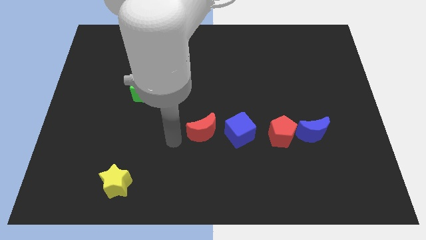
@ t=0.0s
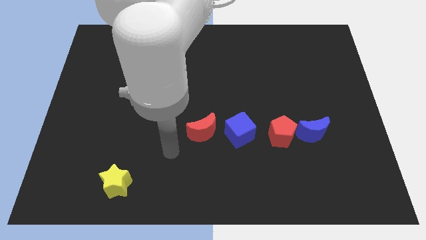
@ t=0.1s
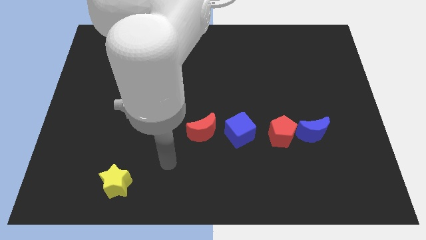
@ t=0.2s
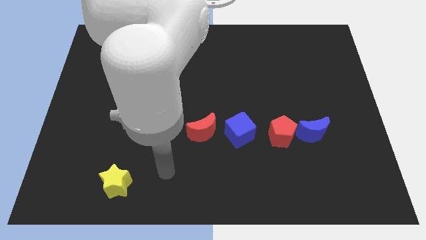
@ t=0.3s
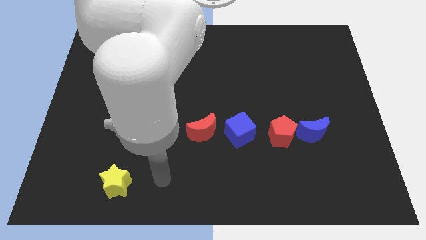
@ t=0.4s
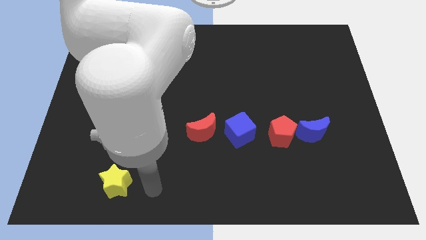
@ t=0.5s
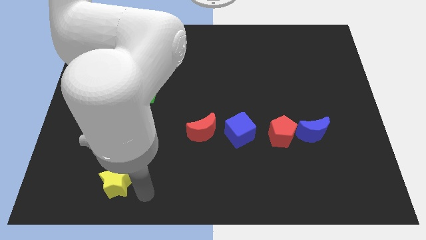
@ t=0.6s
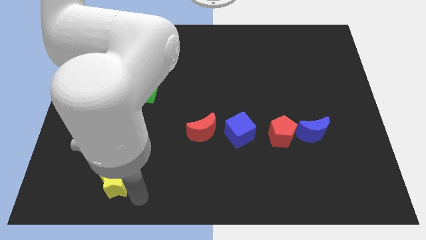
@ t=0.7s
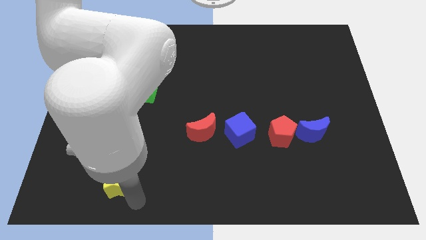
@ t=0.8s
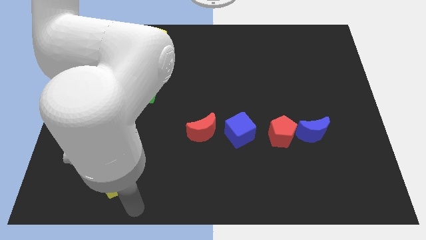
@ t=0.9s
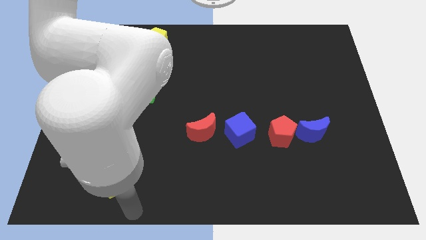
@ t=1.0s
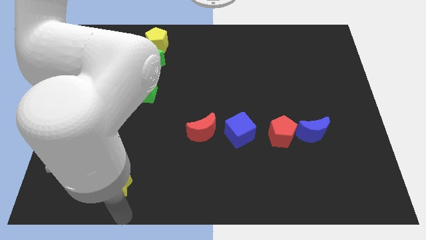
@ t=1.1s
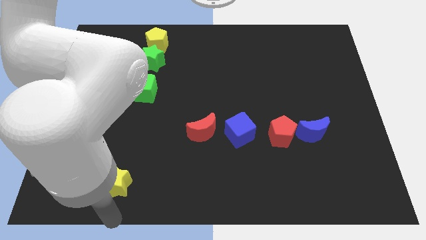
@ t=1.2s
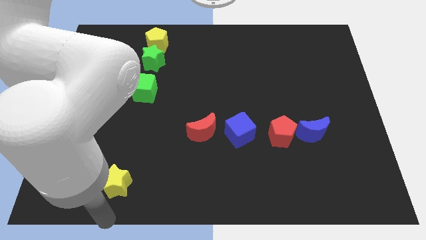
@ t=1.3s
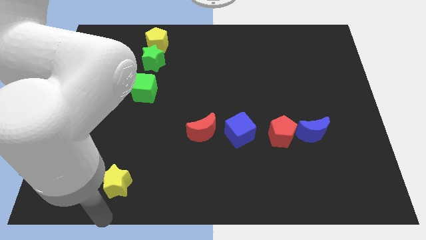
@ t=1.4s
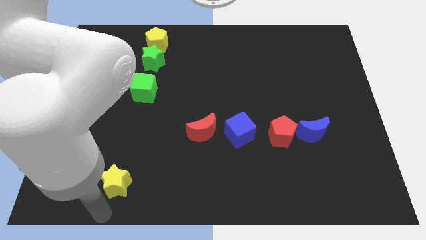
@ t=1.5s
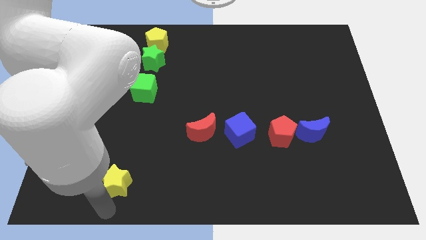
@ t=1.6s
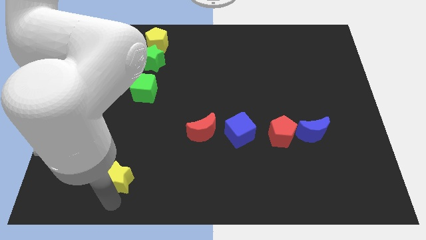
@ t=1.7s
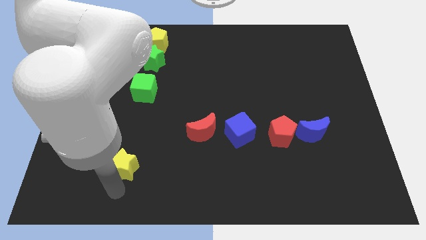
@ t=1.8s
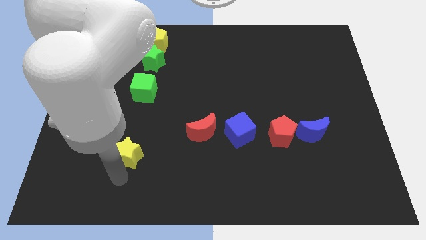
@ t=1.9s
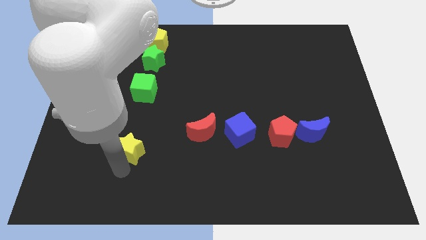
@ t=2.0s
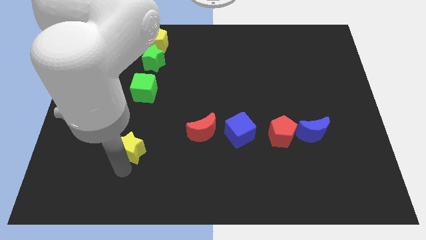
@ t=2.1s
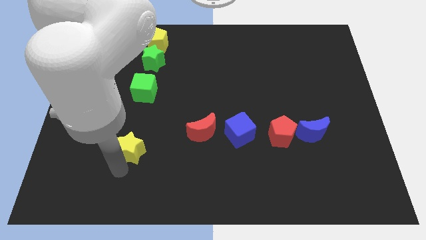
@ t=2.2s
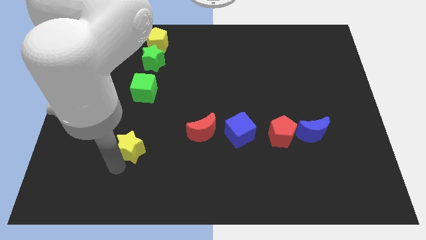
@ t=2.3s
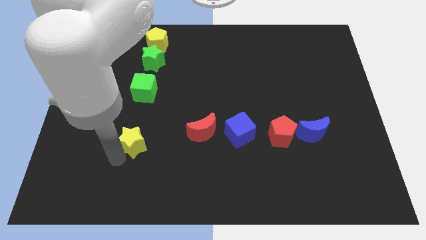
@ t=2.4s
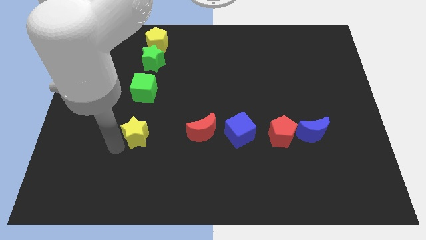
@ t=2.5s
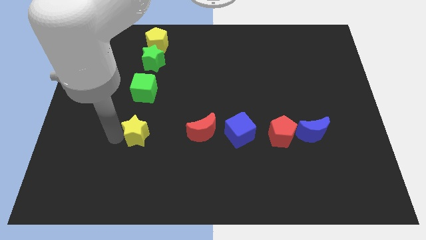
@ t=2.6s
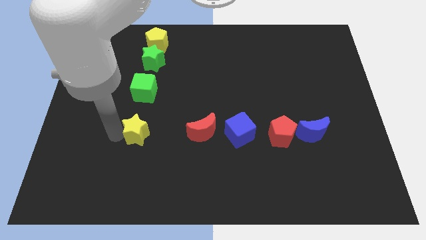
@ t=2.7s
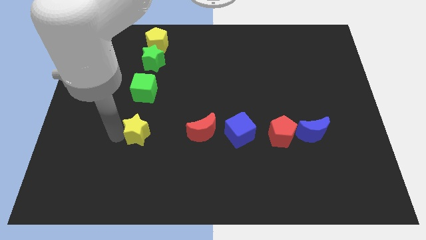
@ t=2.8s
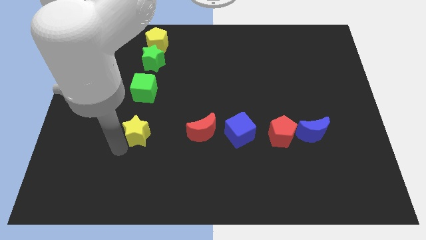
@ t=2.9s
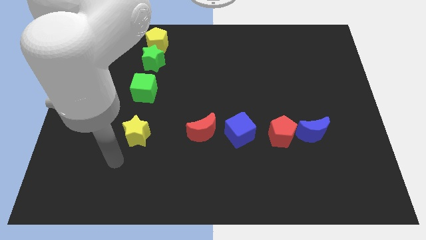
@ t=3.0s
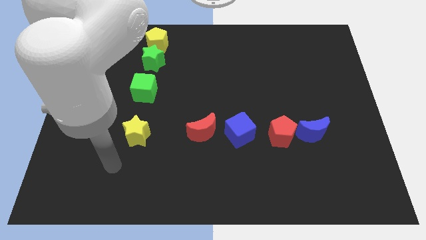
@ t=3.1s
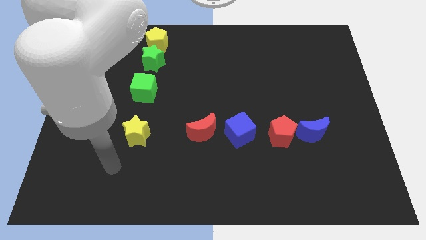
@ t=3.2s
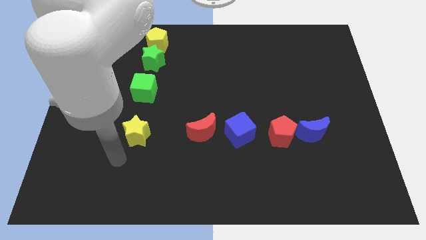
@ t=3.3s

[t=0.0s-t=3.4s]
place yellow star below the green cube

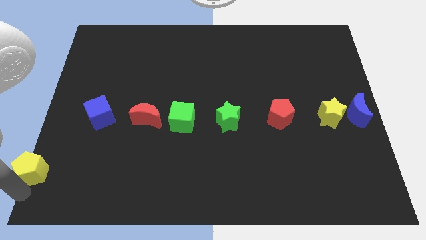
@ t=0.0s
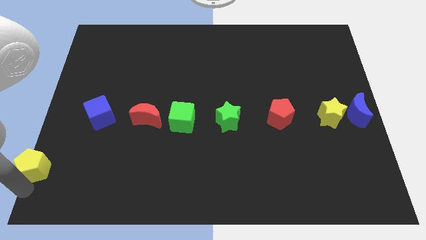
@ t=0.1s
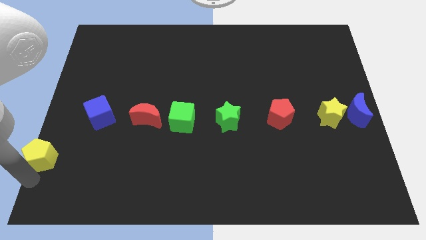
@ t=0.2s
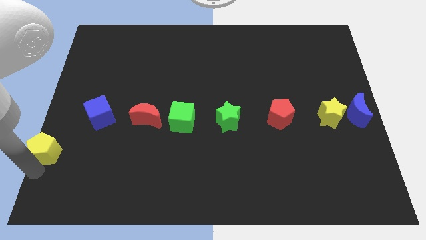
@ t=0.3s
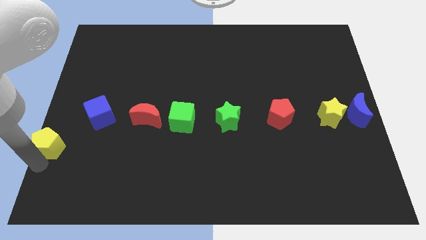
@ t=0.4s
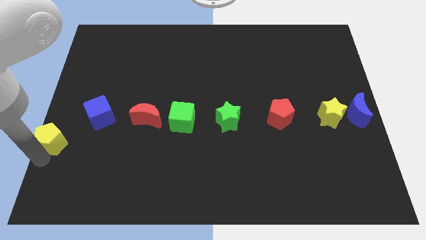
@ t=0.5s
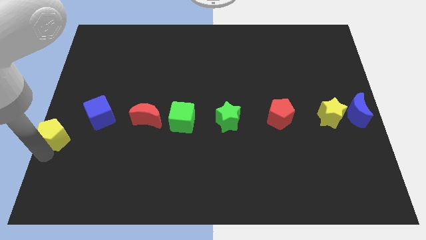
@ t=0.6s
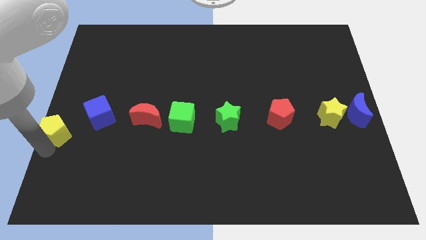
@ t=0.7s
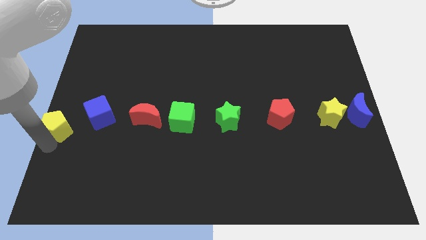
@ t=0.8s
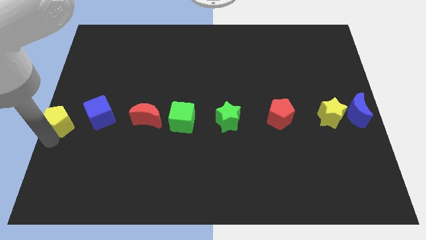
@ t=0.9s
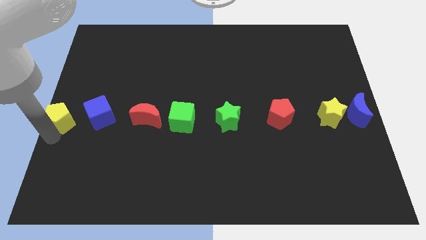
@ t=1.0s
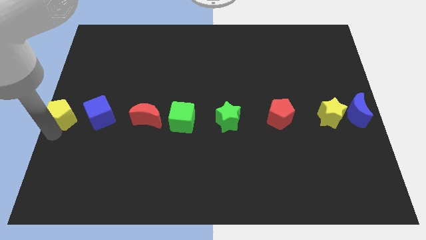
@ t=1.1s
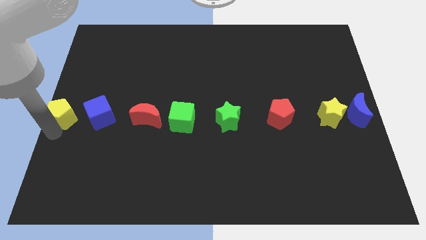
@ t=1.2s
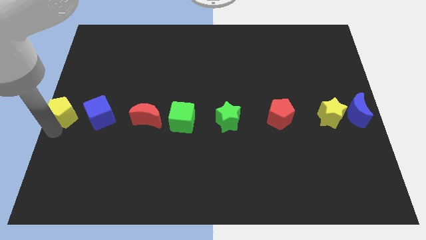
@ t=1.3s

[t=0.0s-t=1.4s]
put the yellow pentagon at the center left of the board

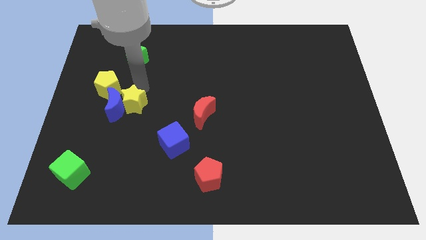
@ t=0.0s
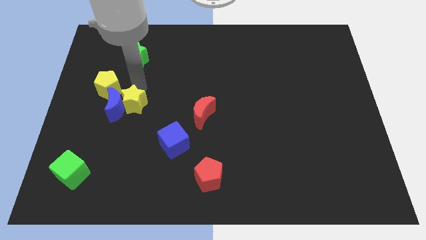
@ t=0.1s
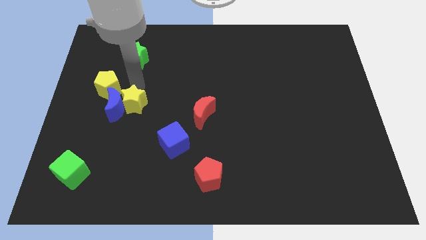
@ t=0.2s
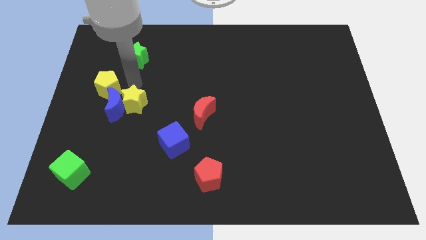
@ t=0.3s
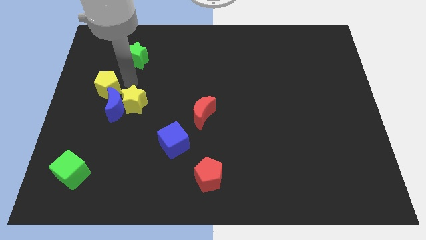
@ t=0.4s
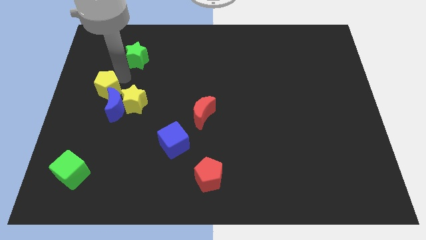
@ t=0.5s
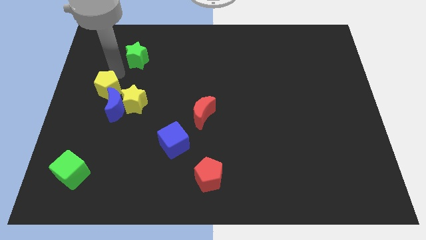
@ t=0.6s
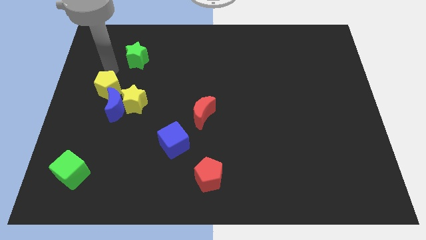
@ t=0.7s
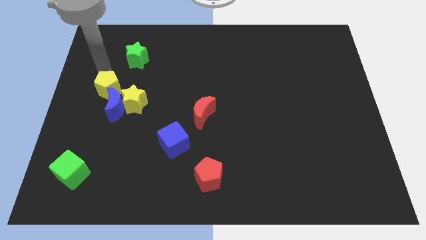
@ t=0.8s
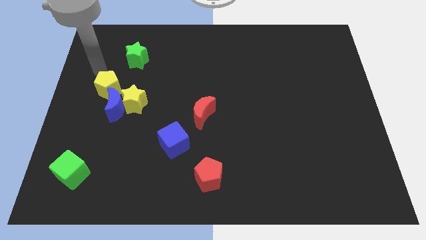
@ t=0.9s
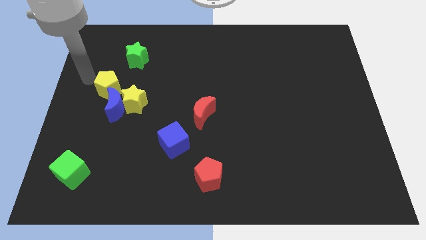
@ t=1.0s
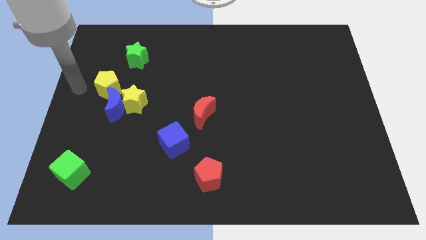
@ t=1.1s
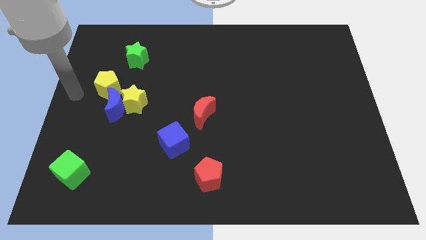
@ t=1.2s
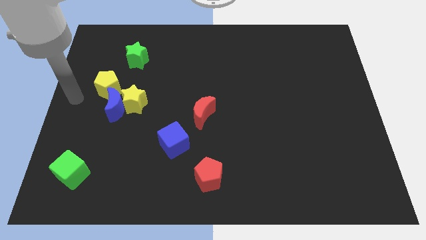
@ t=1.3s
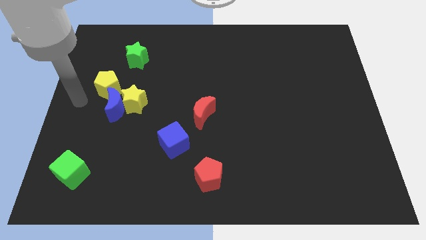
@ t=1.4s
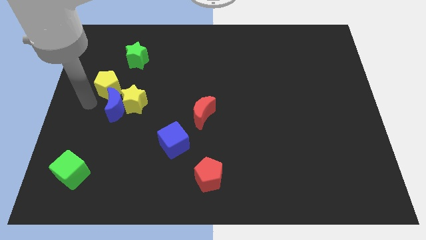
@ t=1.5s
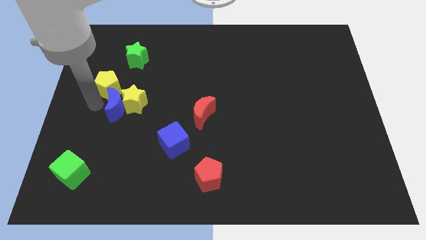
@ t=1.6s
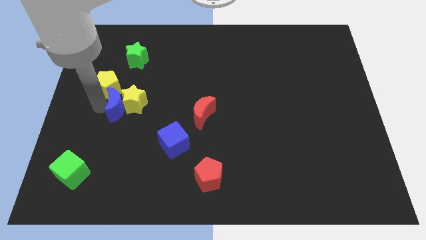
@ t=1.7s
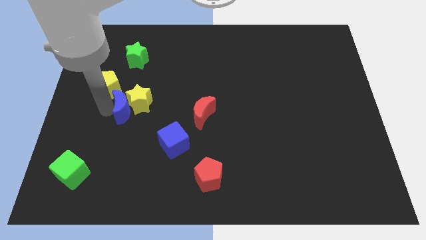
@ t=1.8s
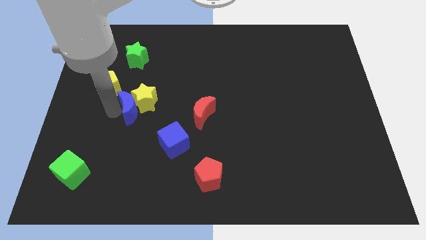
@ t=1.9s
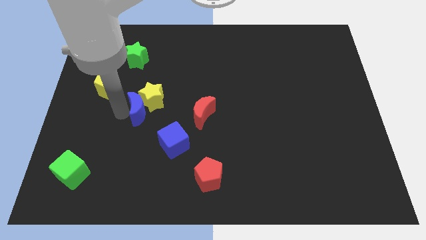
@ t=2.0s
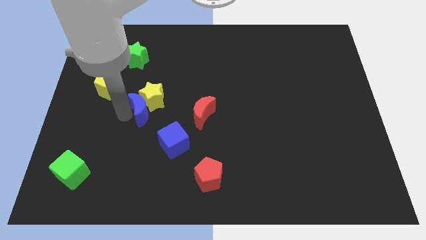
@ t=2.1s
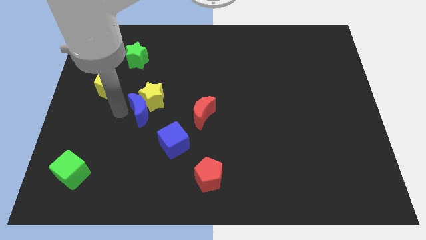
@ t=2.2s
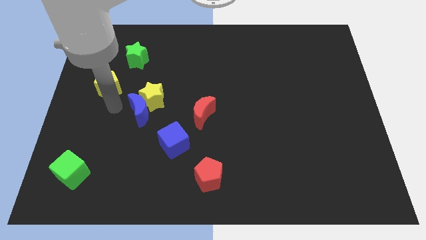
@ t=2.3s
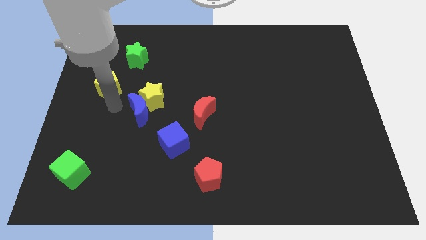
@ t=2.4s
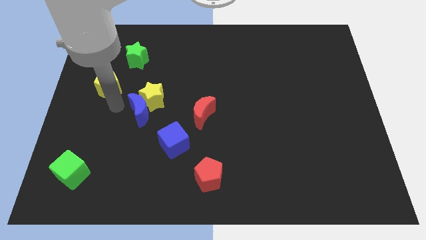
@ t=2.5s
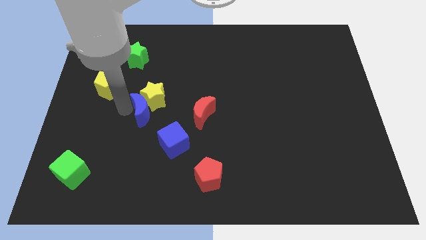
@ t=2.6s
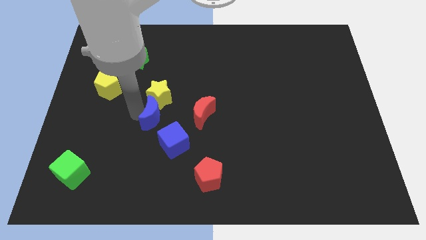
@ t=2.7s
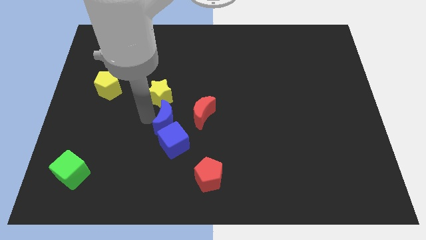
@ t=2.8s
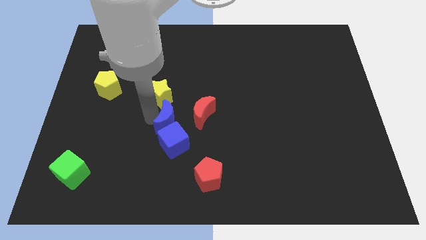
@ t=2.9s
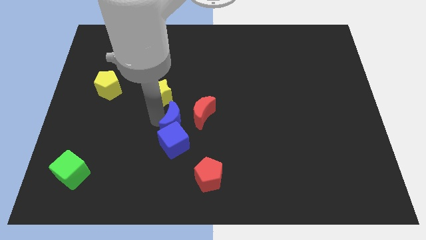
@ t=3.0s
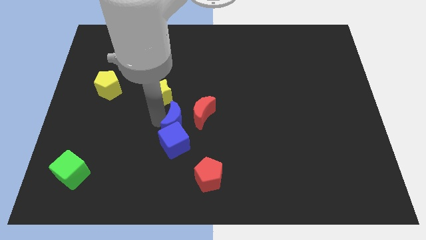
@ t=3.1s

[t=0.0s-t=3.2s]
push blue crescent above blue cube

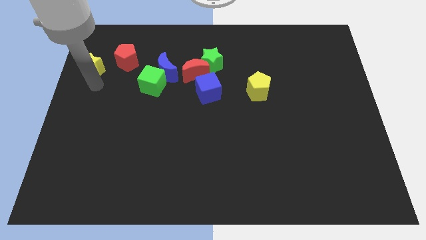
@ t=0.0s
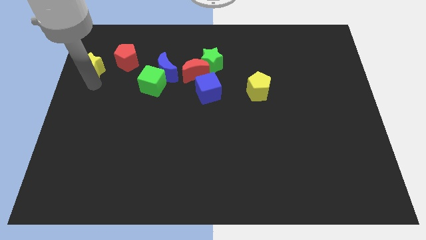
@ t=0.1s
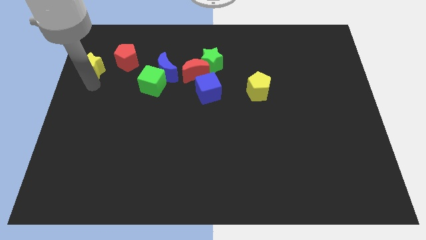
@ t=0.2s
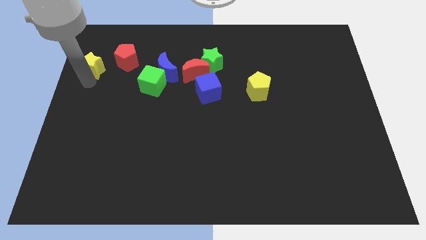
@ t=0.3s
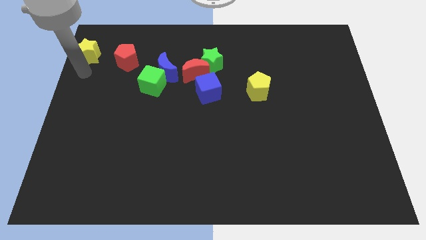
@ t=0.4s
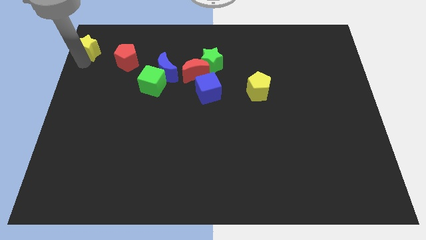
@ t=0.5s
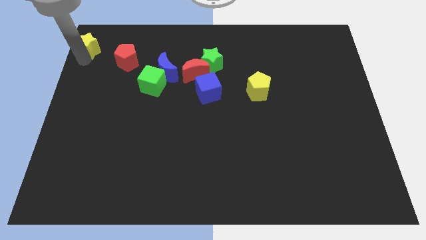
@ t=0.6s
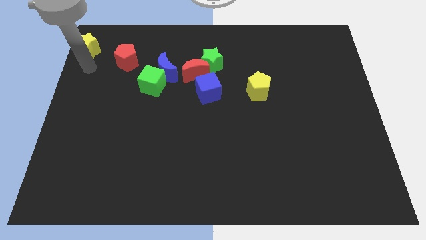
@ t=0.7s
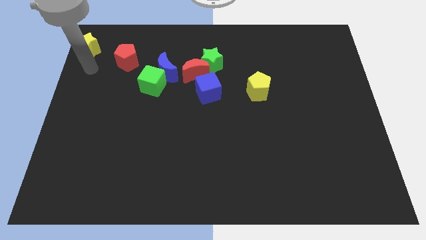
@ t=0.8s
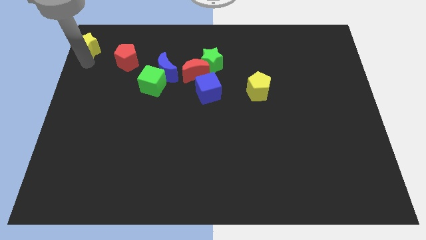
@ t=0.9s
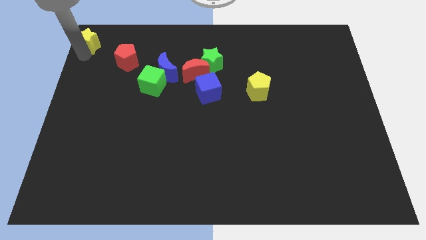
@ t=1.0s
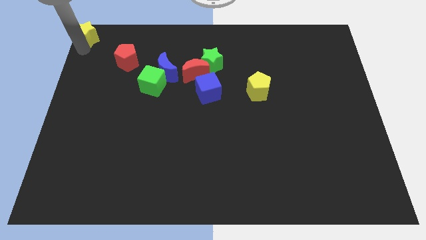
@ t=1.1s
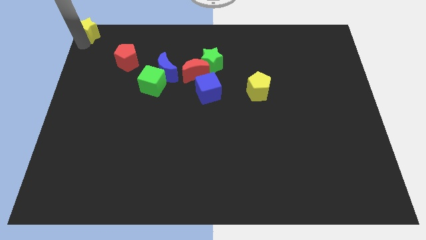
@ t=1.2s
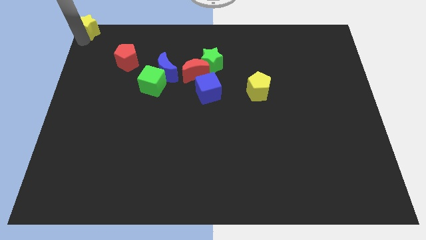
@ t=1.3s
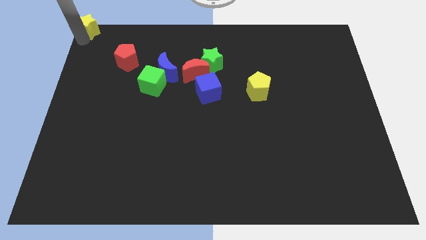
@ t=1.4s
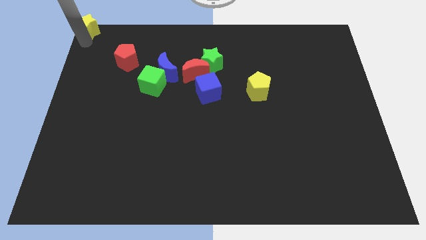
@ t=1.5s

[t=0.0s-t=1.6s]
move the yellow star diagonally to red pentagon
